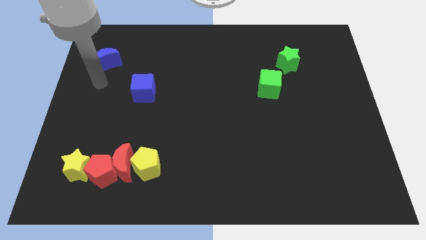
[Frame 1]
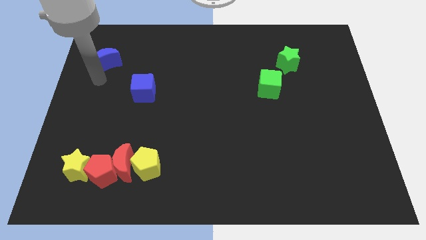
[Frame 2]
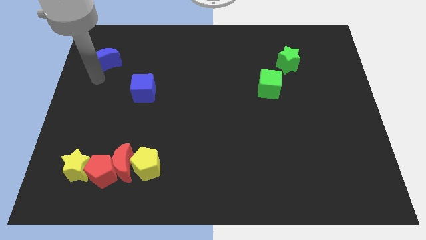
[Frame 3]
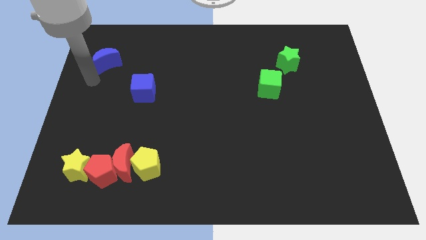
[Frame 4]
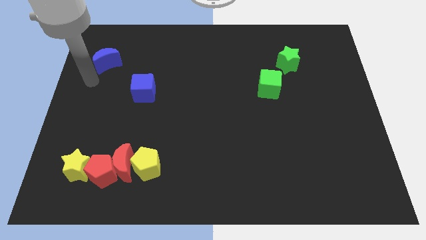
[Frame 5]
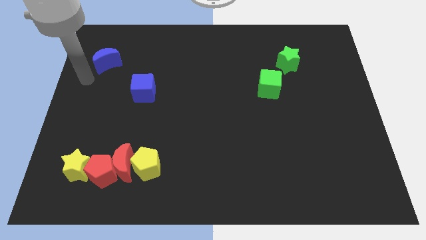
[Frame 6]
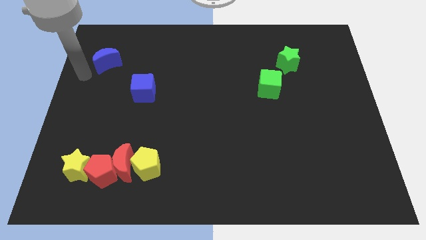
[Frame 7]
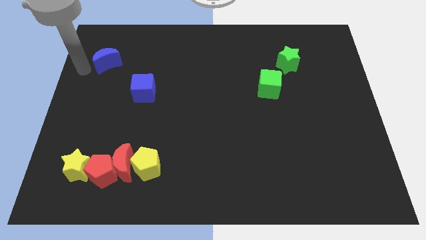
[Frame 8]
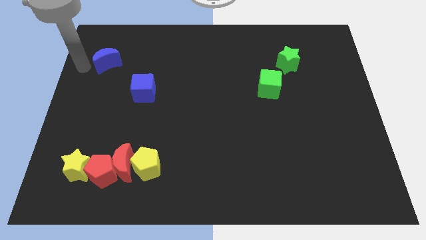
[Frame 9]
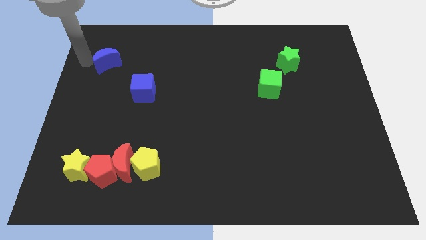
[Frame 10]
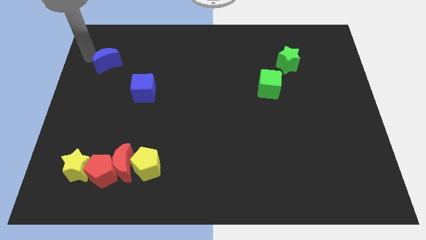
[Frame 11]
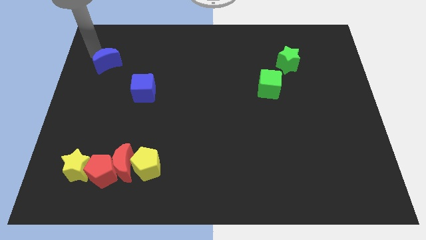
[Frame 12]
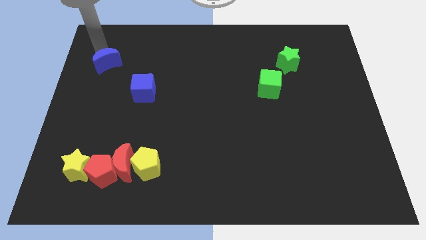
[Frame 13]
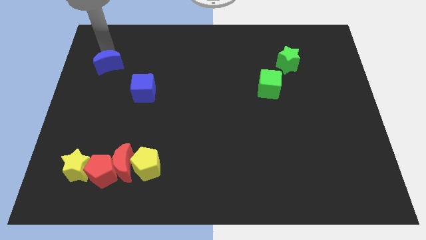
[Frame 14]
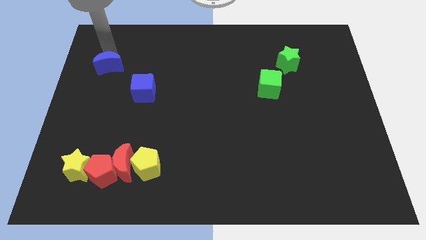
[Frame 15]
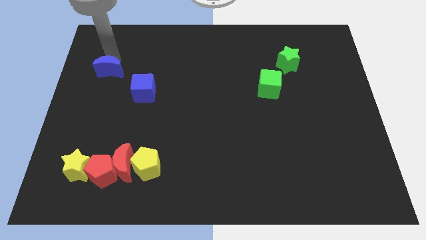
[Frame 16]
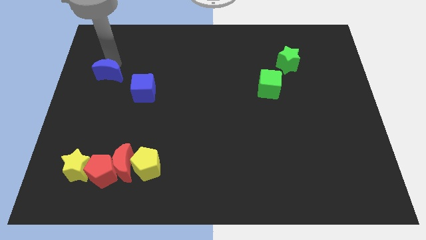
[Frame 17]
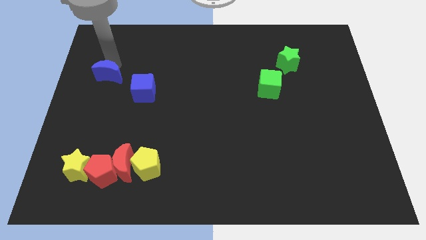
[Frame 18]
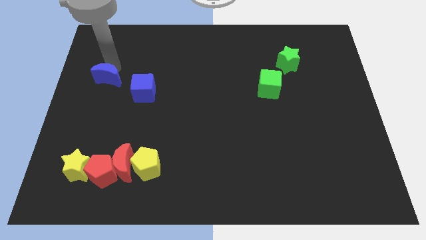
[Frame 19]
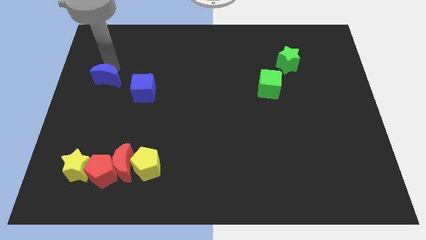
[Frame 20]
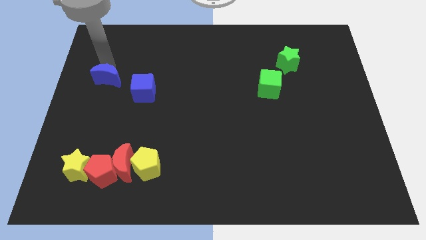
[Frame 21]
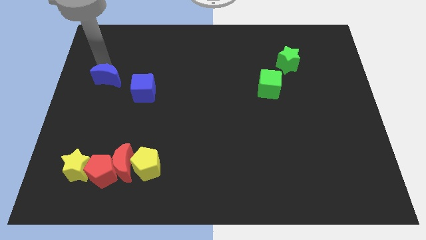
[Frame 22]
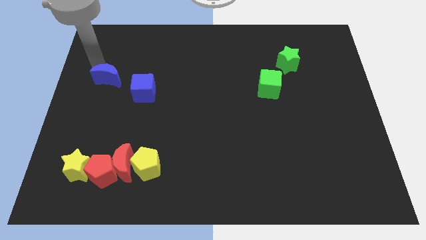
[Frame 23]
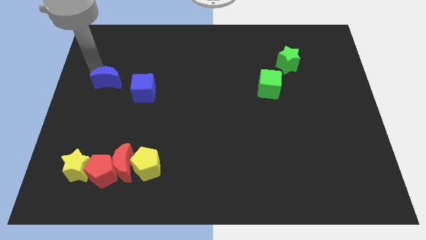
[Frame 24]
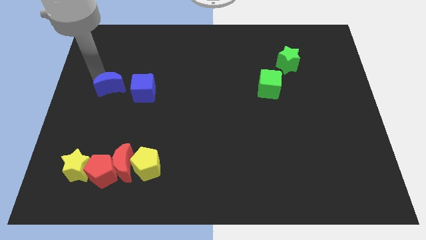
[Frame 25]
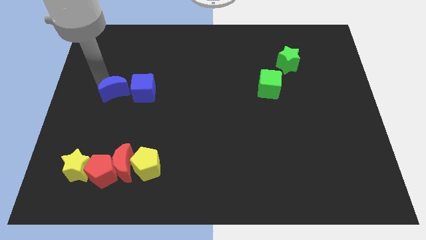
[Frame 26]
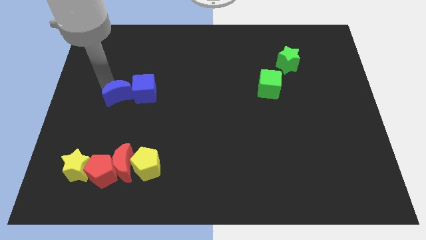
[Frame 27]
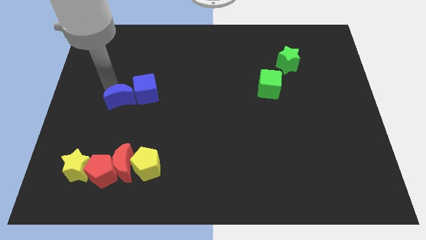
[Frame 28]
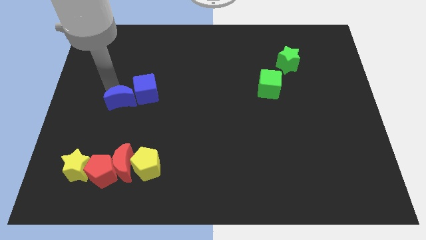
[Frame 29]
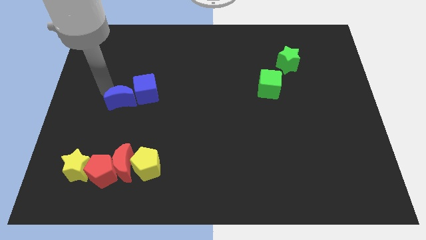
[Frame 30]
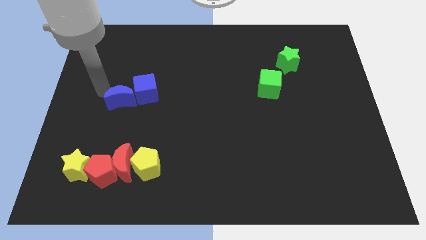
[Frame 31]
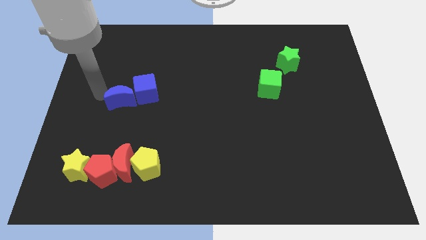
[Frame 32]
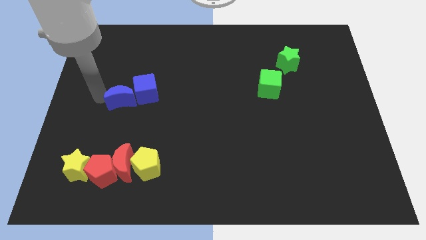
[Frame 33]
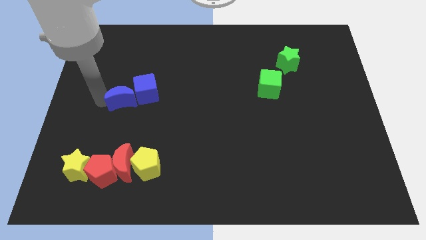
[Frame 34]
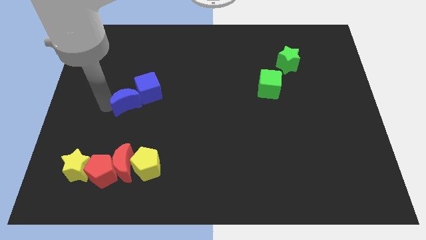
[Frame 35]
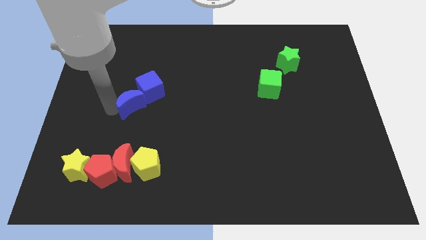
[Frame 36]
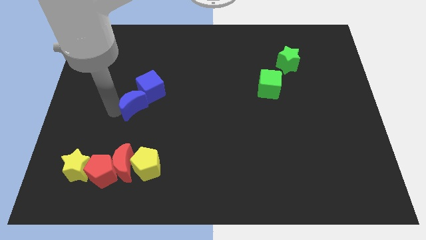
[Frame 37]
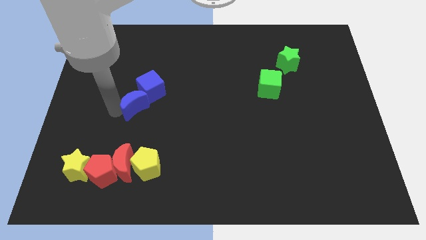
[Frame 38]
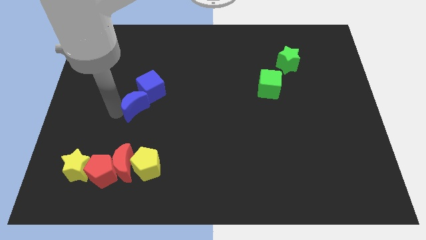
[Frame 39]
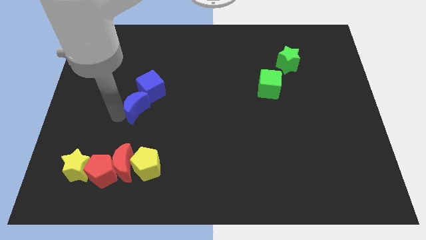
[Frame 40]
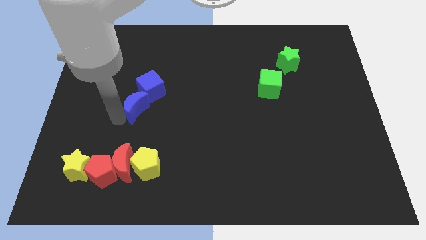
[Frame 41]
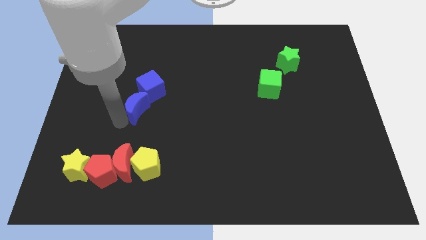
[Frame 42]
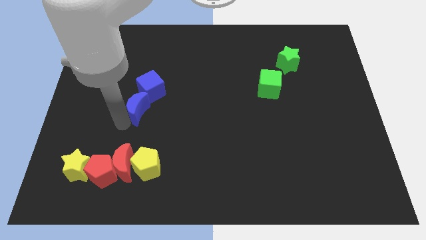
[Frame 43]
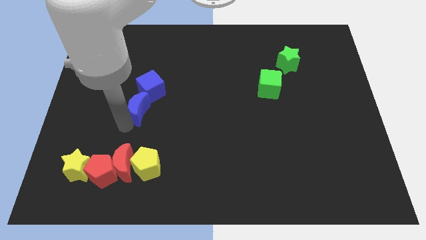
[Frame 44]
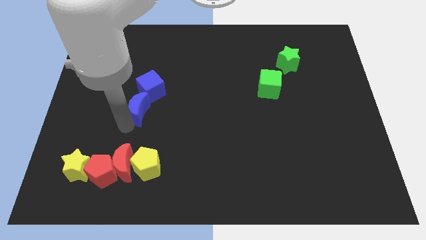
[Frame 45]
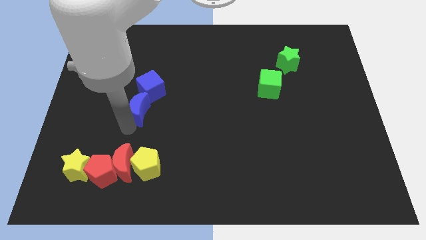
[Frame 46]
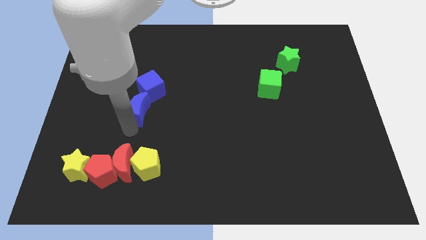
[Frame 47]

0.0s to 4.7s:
place the blue moon in between the red moon and blue cube

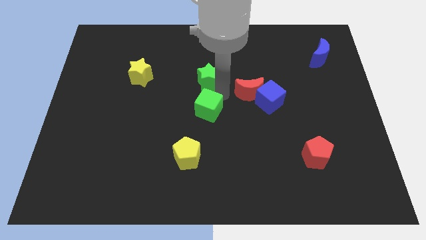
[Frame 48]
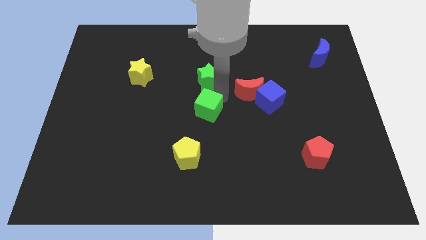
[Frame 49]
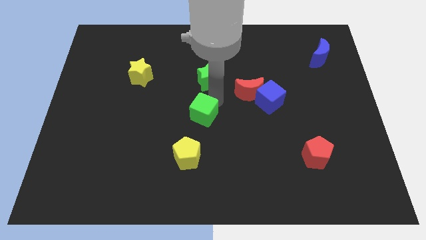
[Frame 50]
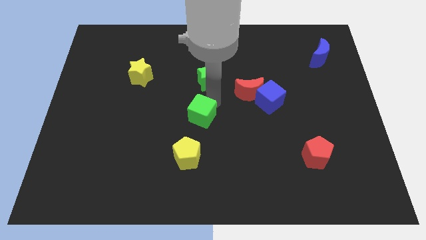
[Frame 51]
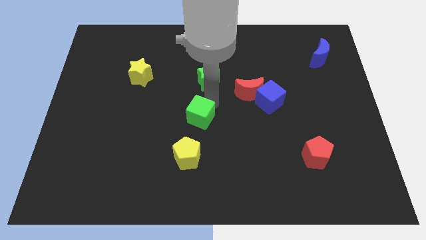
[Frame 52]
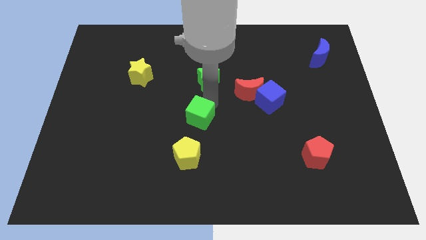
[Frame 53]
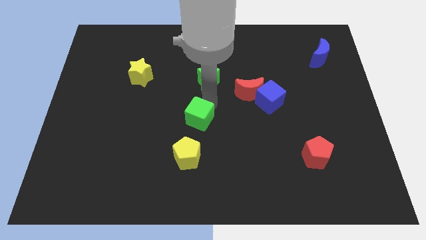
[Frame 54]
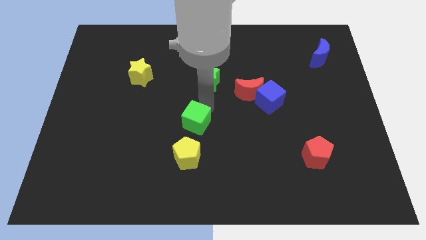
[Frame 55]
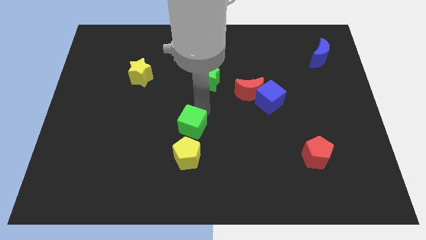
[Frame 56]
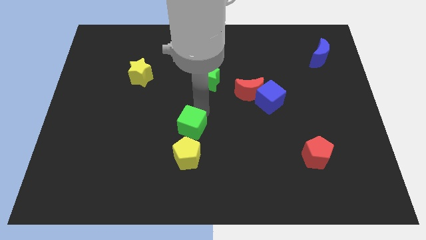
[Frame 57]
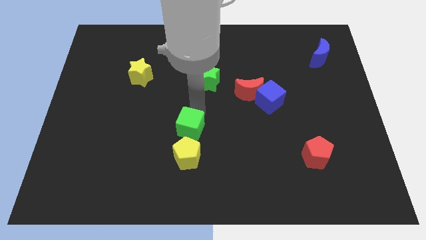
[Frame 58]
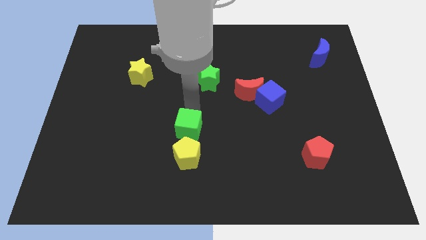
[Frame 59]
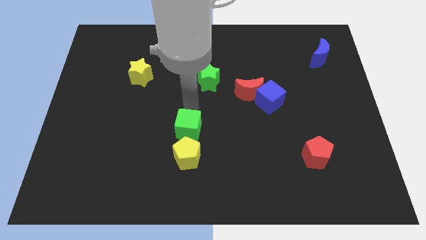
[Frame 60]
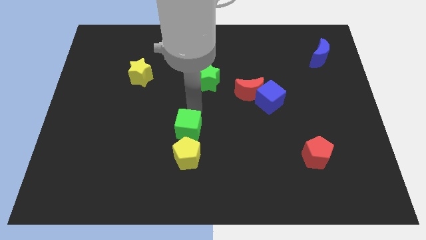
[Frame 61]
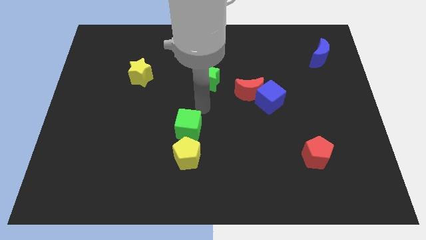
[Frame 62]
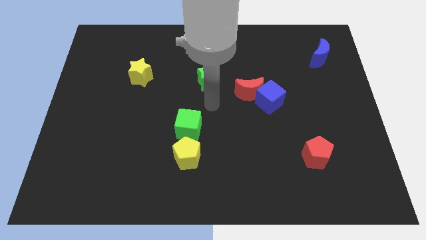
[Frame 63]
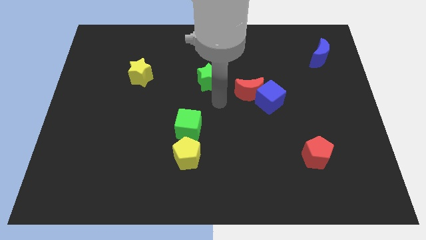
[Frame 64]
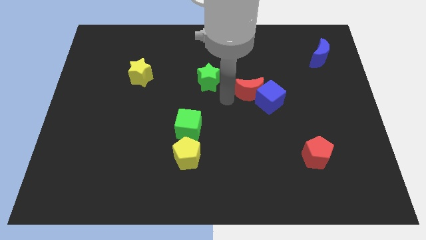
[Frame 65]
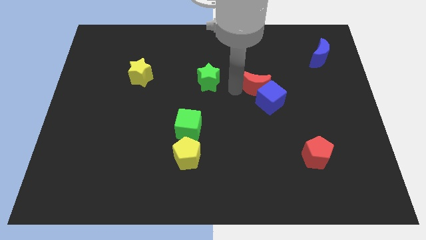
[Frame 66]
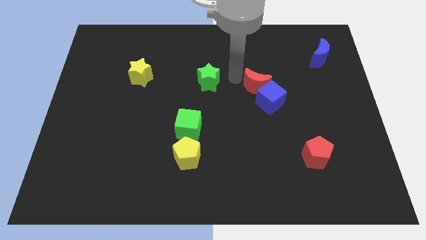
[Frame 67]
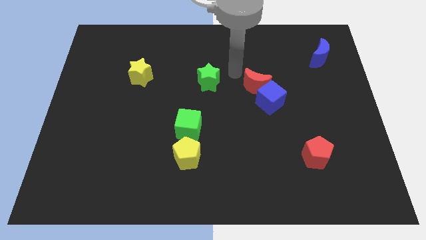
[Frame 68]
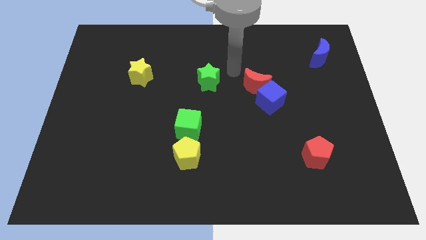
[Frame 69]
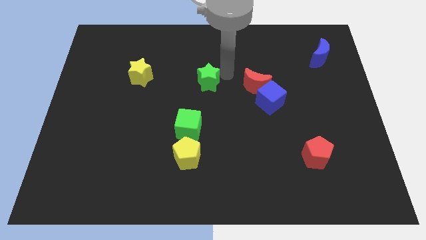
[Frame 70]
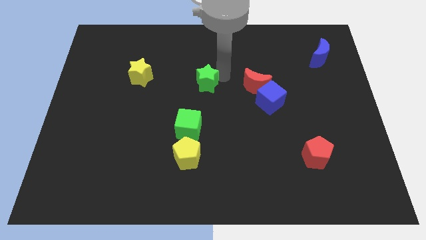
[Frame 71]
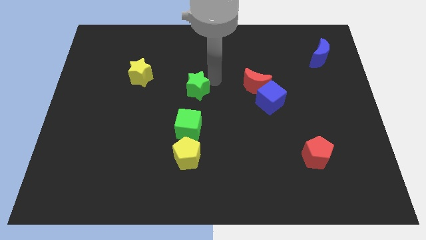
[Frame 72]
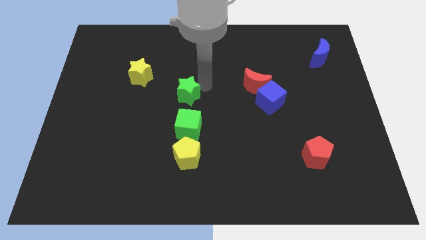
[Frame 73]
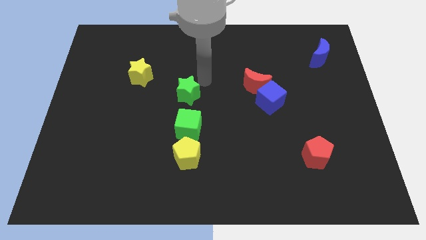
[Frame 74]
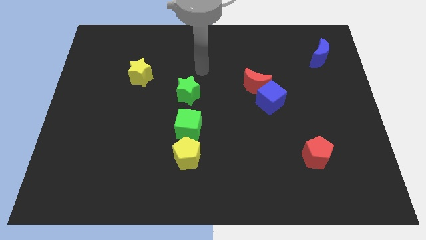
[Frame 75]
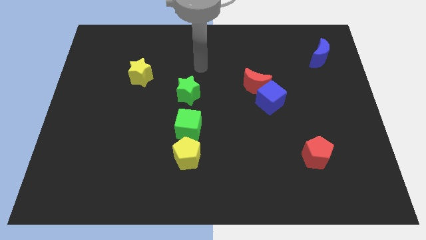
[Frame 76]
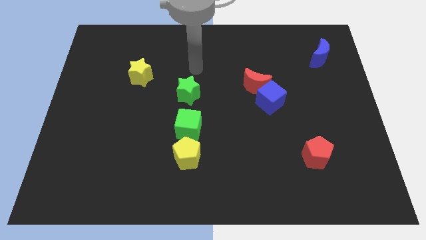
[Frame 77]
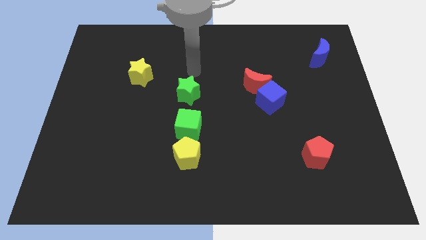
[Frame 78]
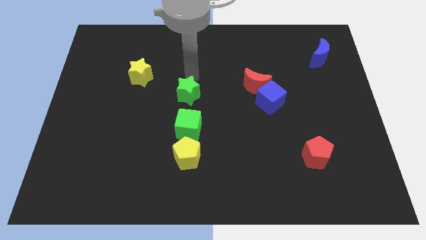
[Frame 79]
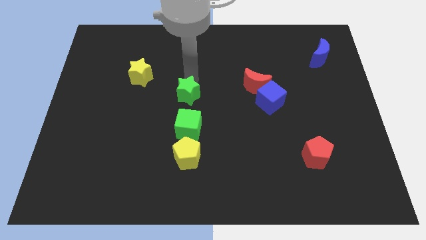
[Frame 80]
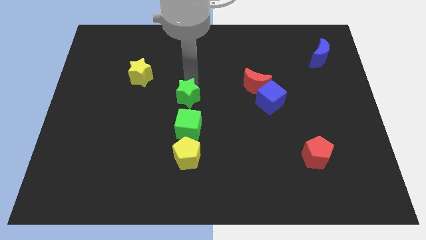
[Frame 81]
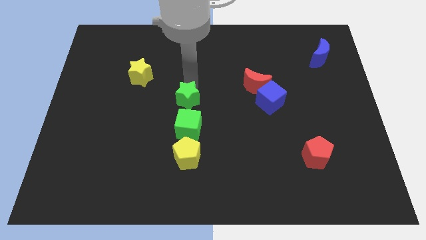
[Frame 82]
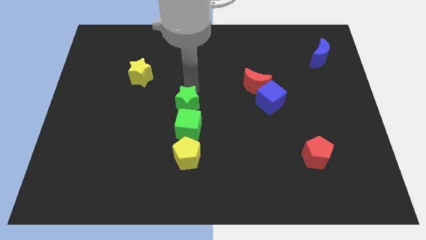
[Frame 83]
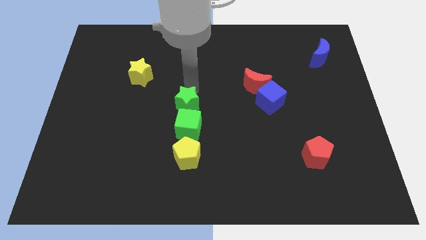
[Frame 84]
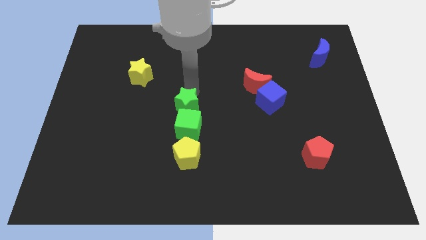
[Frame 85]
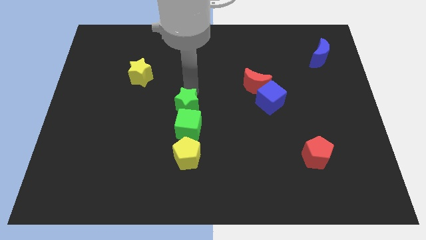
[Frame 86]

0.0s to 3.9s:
make a vertical line along with the green blocks and yellow pentagon

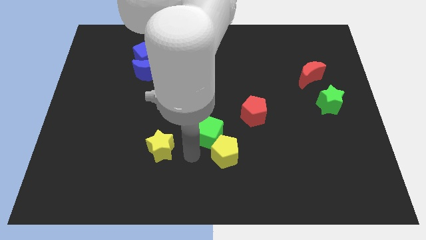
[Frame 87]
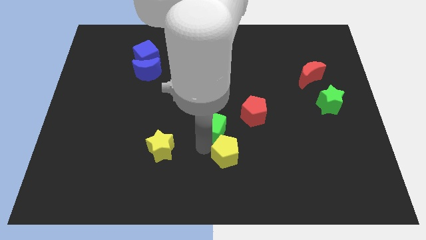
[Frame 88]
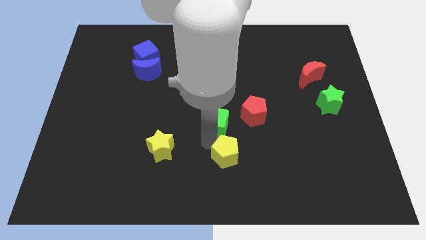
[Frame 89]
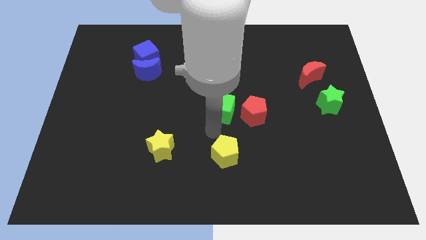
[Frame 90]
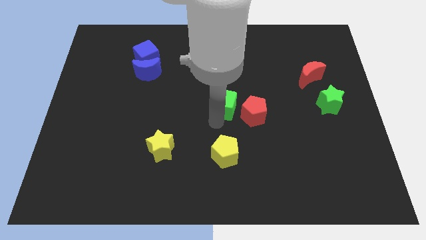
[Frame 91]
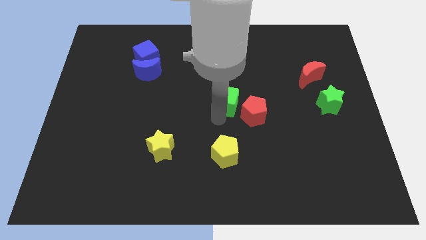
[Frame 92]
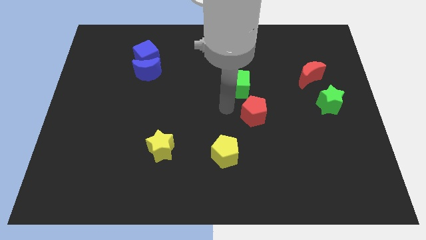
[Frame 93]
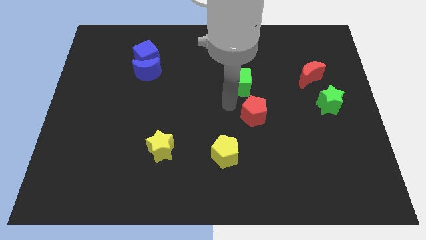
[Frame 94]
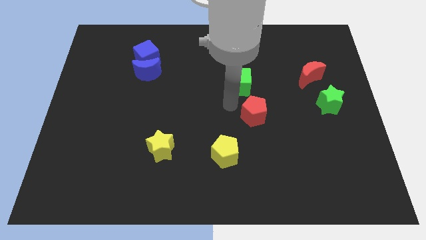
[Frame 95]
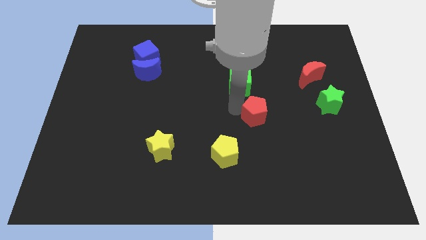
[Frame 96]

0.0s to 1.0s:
place the green cube to the left of the red moon
